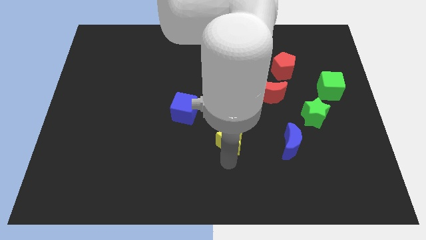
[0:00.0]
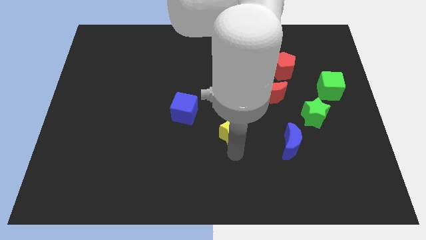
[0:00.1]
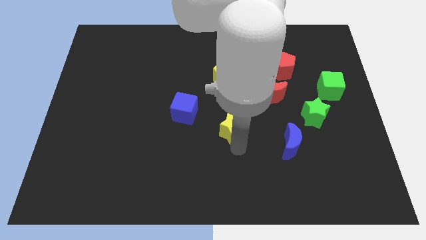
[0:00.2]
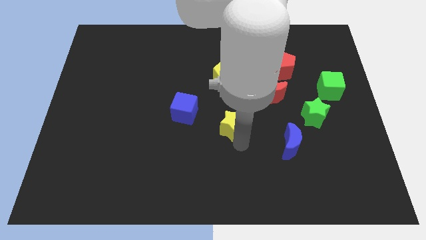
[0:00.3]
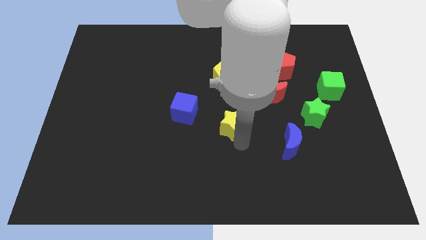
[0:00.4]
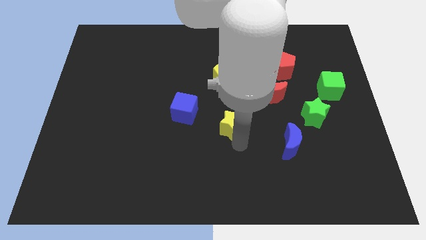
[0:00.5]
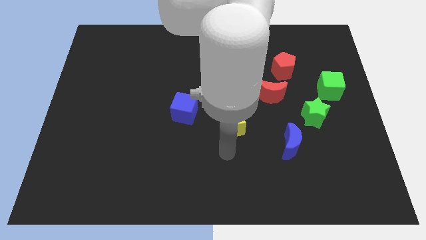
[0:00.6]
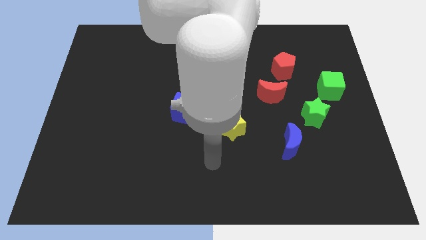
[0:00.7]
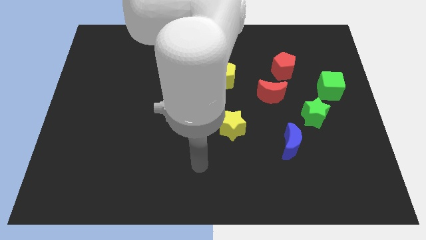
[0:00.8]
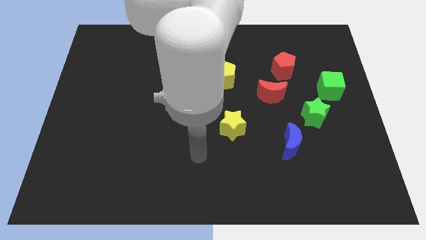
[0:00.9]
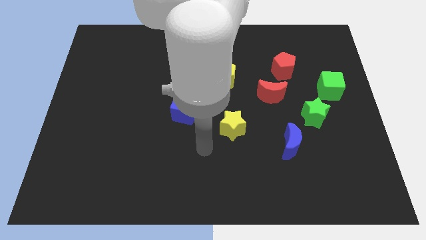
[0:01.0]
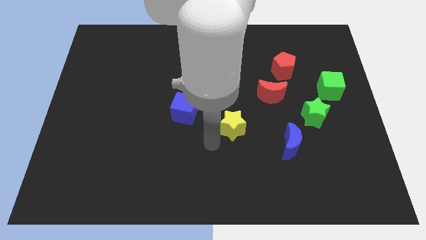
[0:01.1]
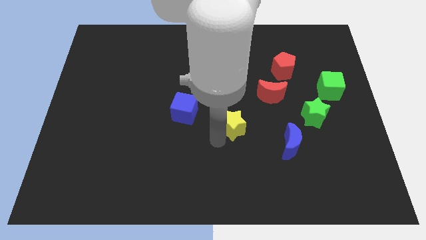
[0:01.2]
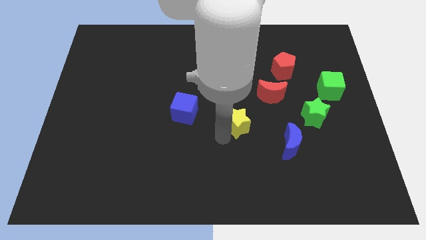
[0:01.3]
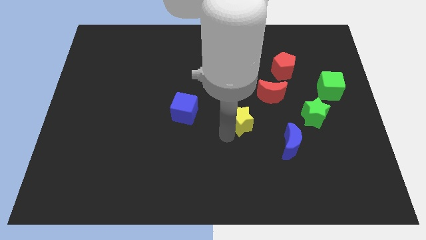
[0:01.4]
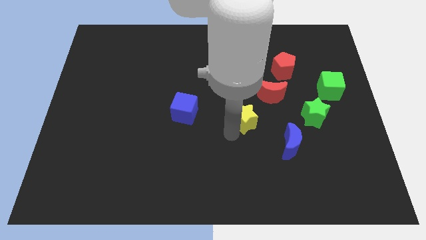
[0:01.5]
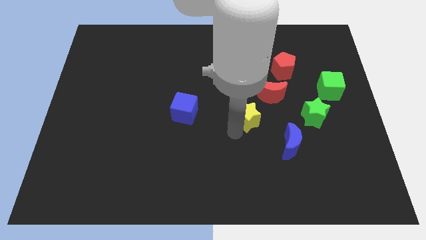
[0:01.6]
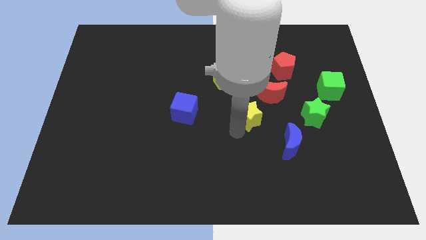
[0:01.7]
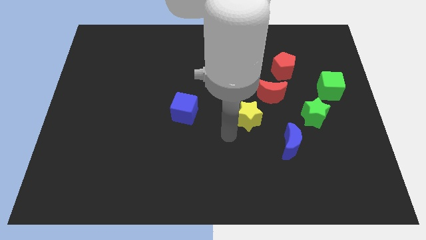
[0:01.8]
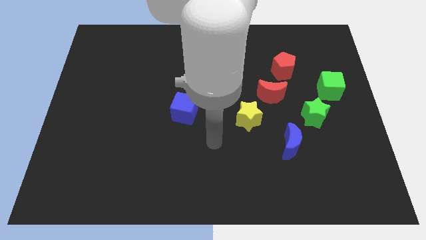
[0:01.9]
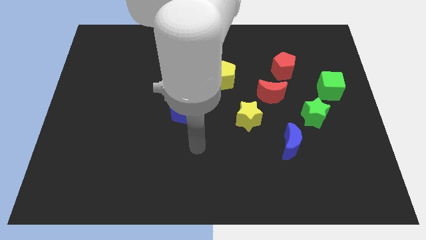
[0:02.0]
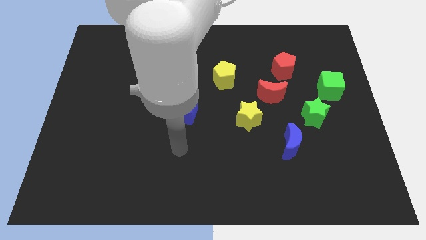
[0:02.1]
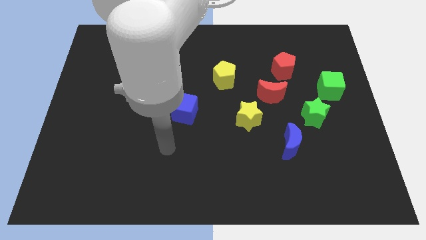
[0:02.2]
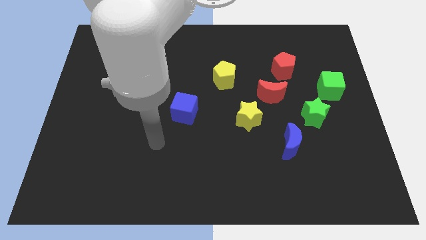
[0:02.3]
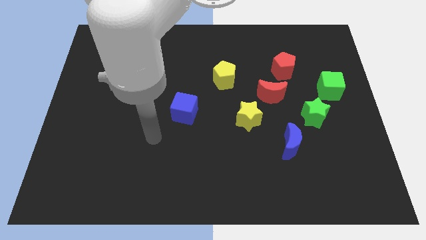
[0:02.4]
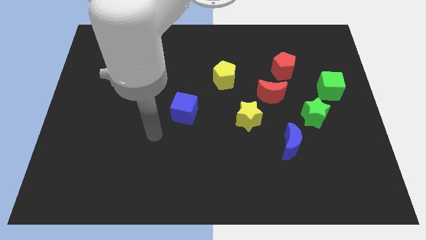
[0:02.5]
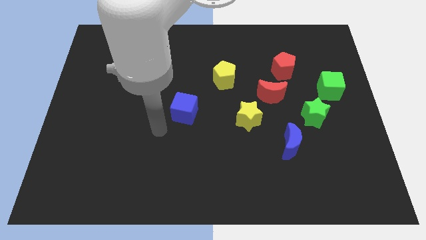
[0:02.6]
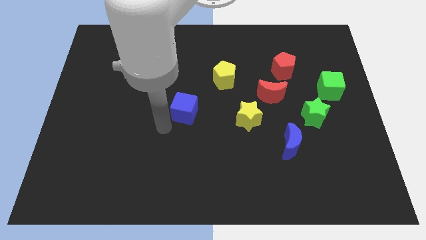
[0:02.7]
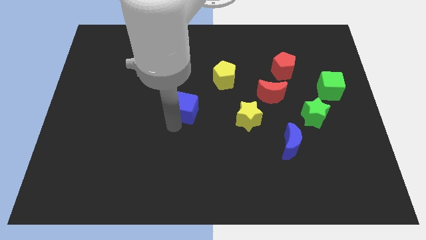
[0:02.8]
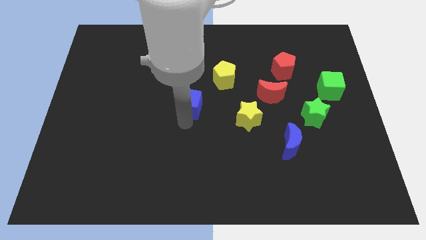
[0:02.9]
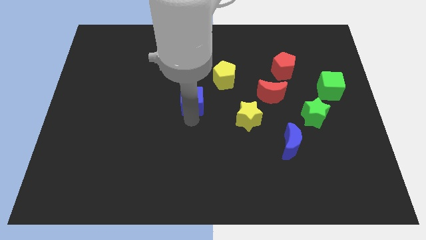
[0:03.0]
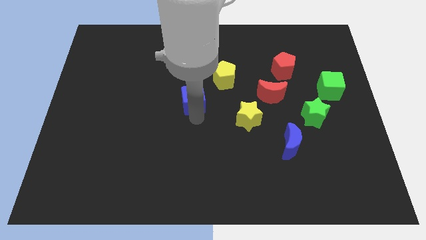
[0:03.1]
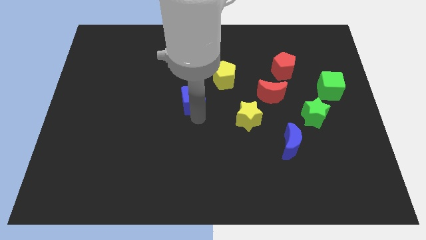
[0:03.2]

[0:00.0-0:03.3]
push yellow star and blue cube slightly to the top right side of the board

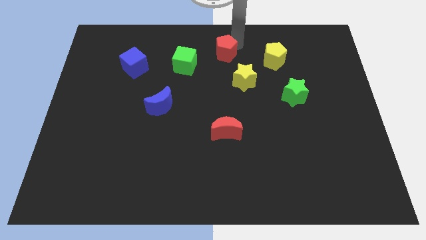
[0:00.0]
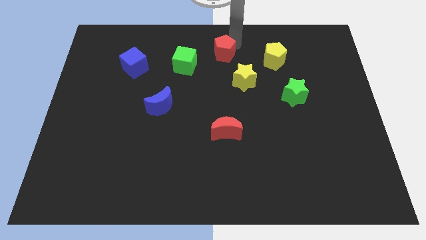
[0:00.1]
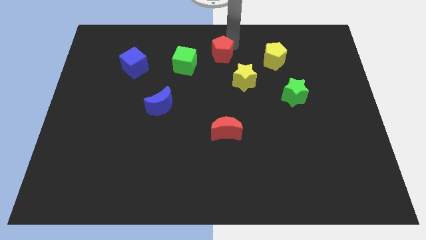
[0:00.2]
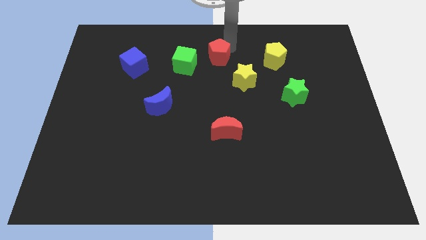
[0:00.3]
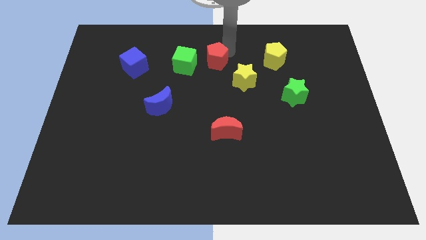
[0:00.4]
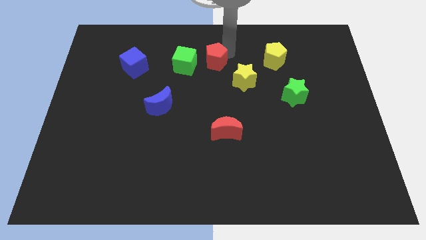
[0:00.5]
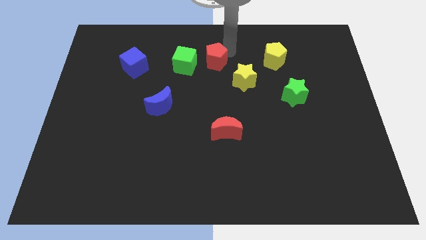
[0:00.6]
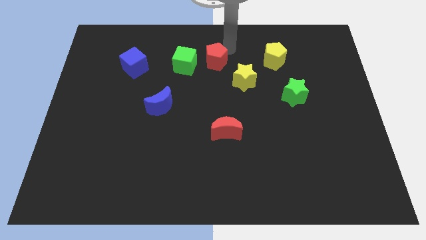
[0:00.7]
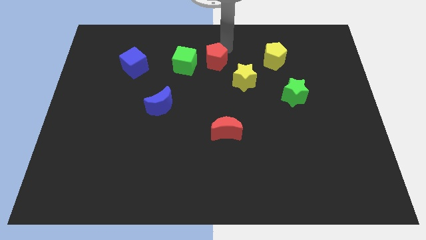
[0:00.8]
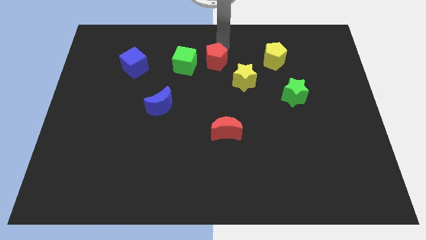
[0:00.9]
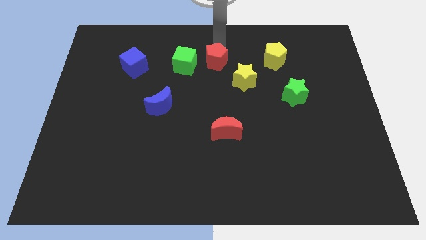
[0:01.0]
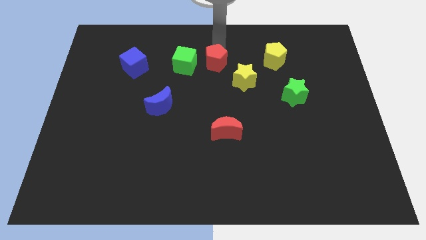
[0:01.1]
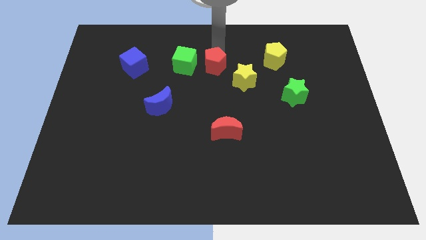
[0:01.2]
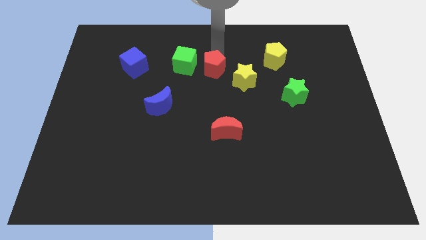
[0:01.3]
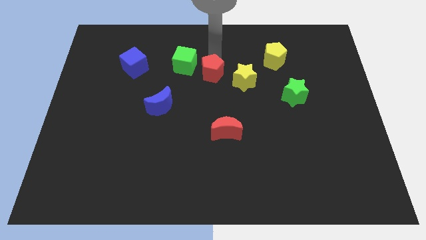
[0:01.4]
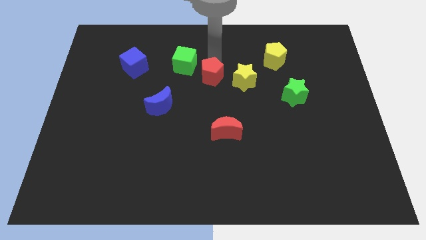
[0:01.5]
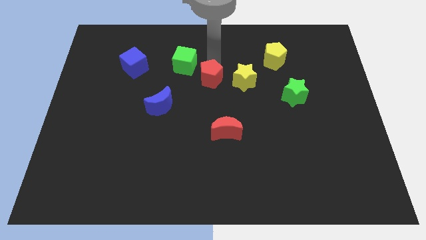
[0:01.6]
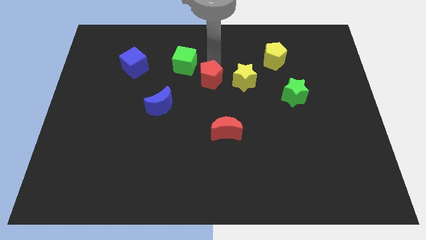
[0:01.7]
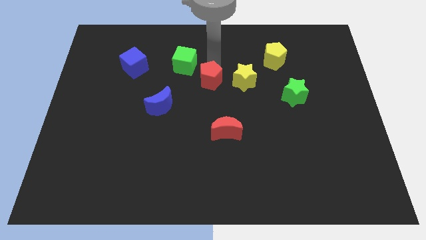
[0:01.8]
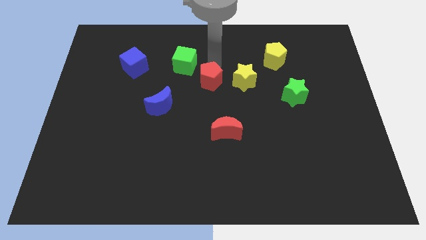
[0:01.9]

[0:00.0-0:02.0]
place the red pentagon horizontally to the left side of the yellow star

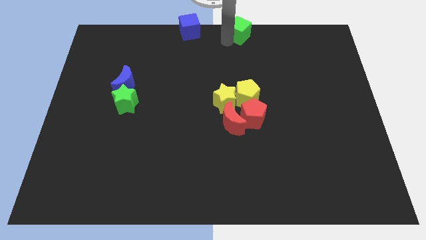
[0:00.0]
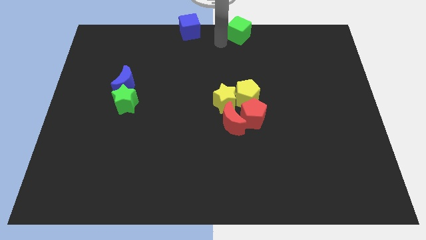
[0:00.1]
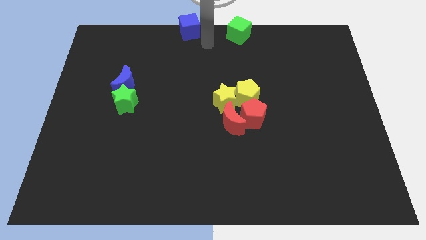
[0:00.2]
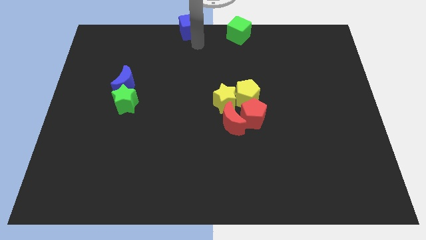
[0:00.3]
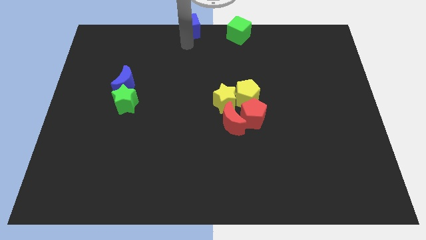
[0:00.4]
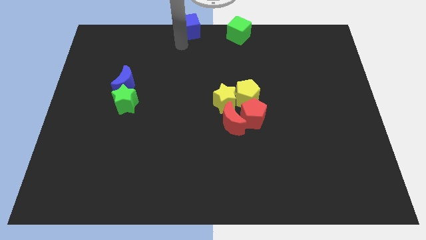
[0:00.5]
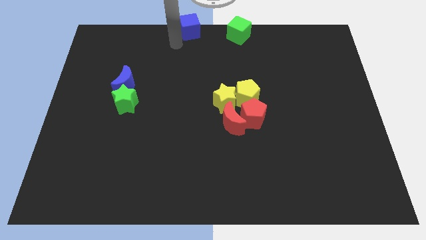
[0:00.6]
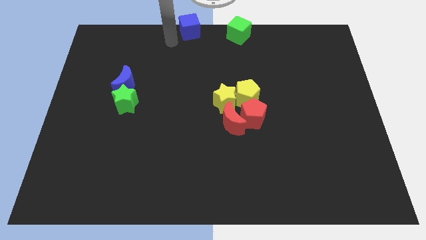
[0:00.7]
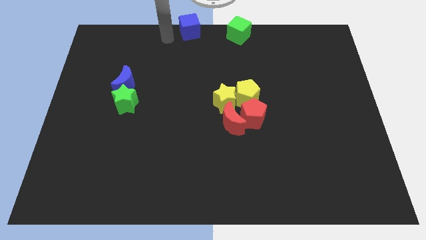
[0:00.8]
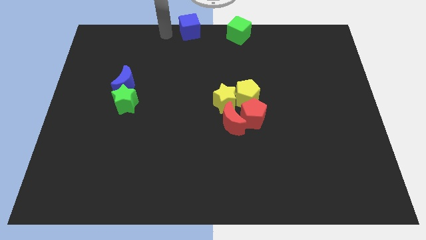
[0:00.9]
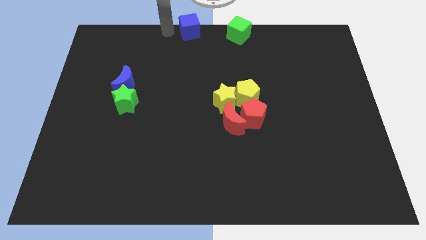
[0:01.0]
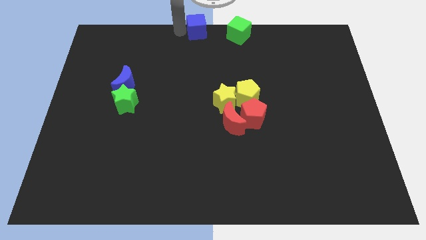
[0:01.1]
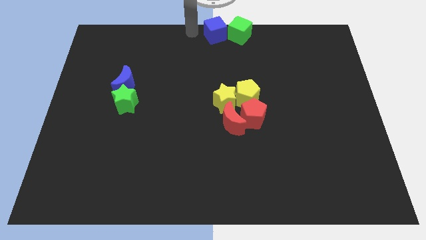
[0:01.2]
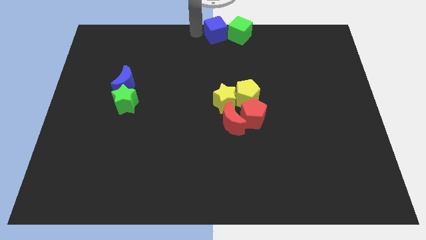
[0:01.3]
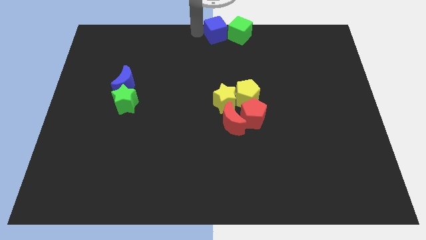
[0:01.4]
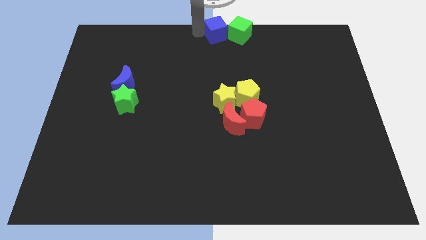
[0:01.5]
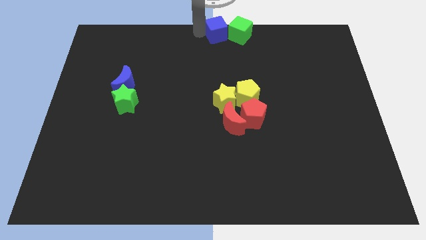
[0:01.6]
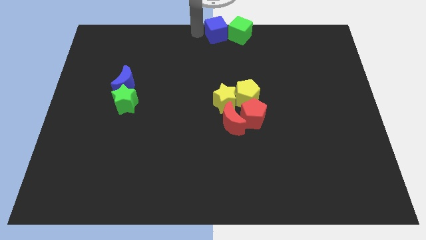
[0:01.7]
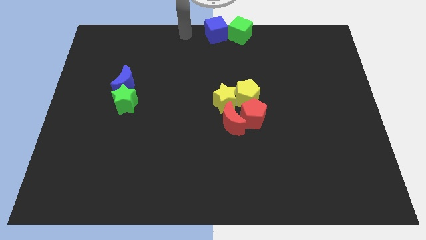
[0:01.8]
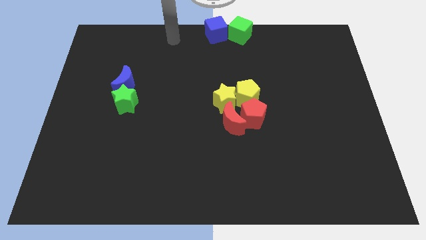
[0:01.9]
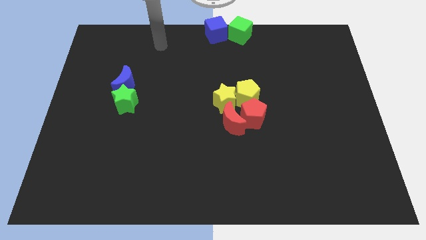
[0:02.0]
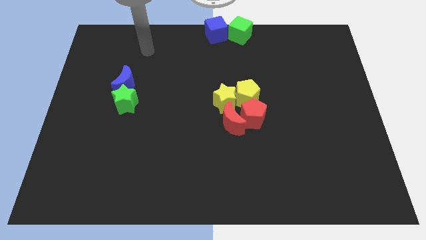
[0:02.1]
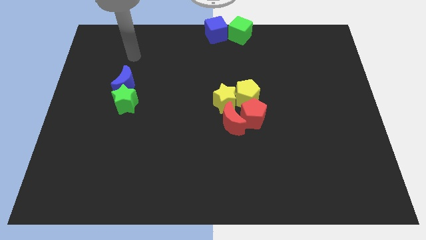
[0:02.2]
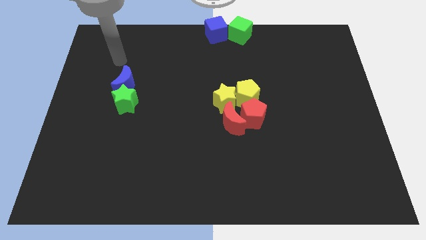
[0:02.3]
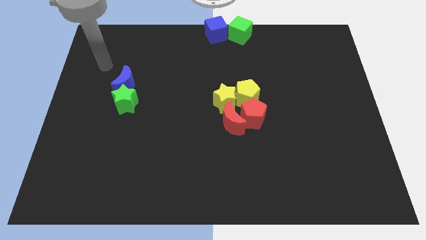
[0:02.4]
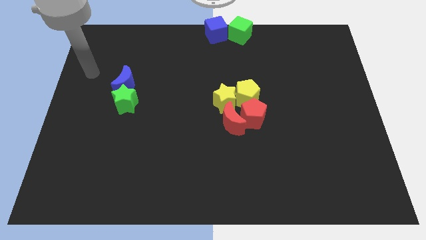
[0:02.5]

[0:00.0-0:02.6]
move the bleu cube to the left of the green cube

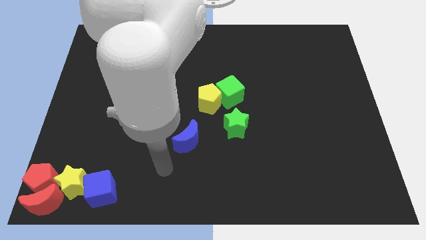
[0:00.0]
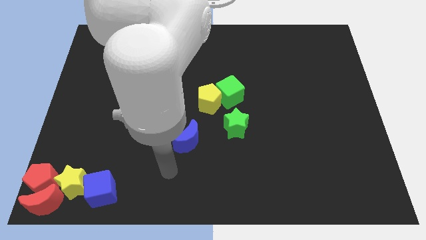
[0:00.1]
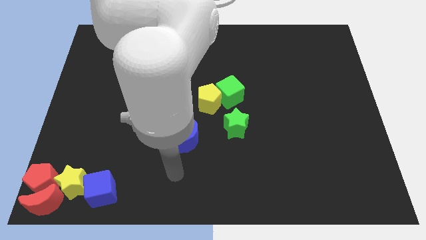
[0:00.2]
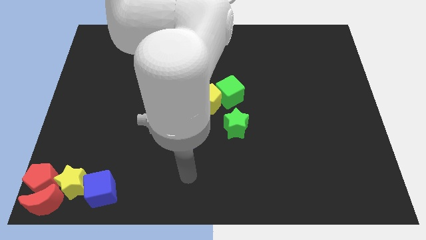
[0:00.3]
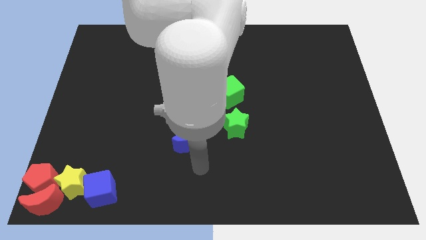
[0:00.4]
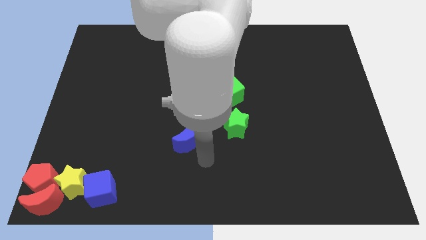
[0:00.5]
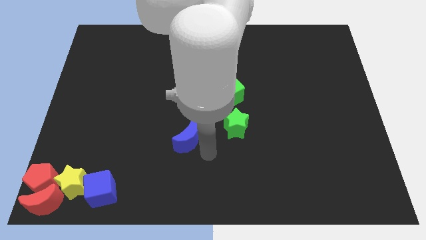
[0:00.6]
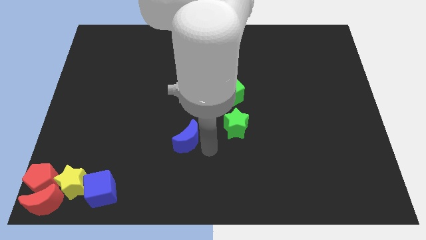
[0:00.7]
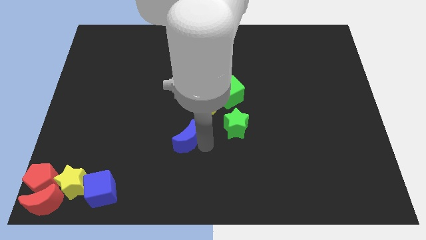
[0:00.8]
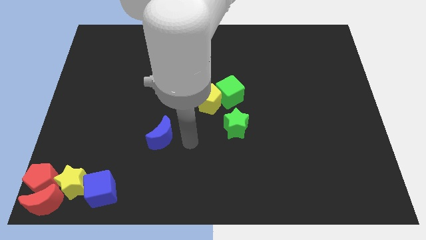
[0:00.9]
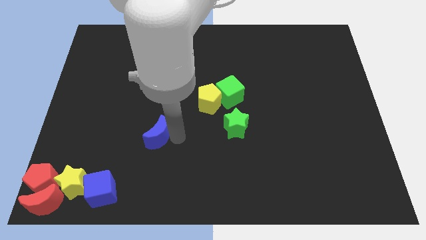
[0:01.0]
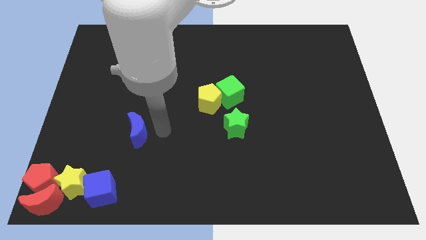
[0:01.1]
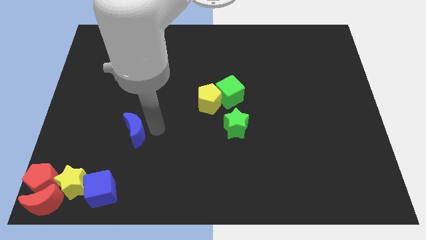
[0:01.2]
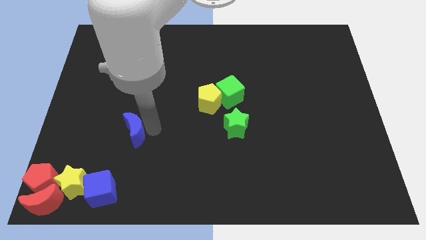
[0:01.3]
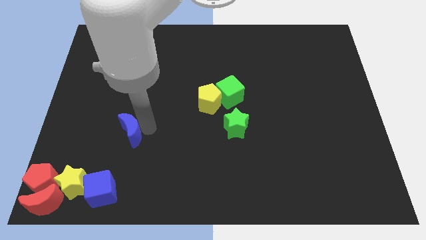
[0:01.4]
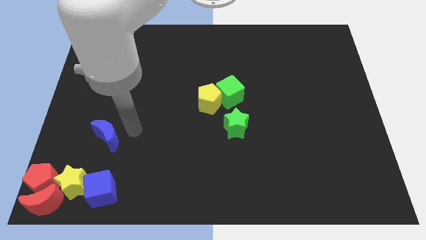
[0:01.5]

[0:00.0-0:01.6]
push the blue moon towards the left side of the board
